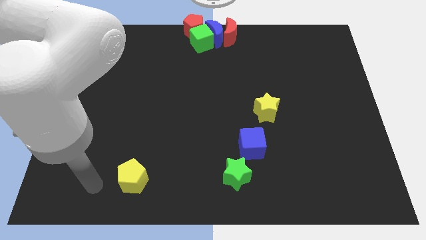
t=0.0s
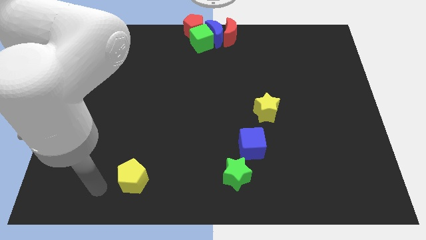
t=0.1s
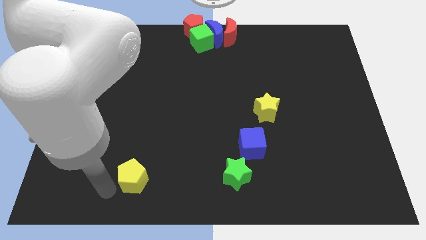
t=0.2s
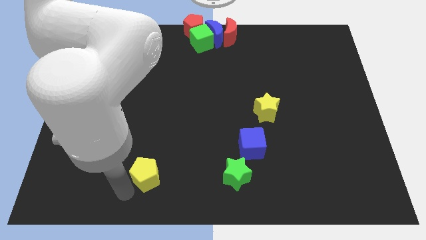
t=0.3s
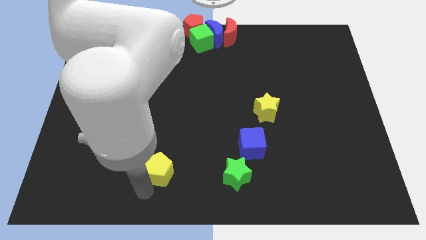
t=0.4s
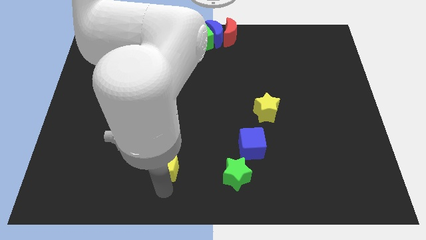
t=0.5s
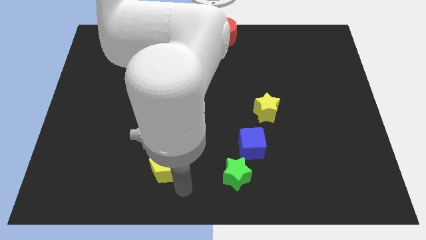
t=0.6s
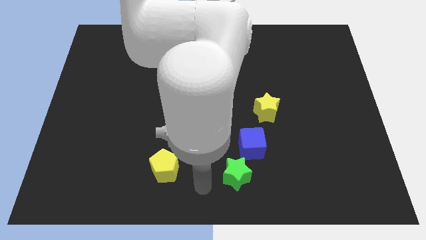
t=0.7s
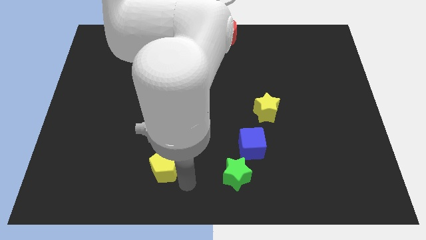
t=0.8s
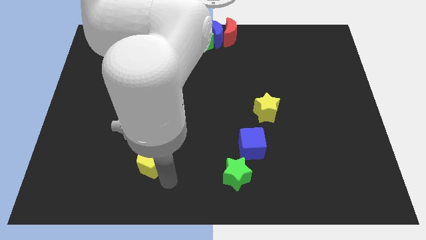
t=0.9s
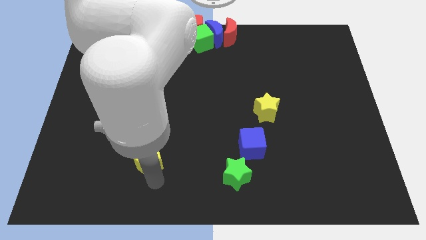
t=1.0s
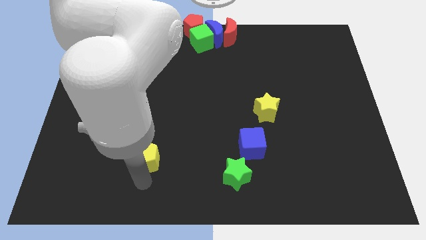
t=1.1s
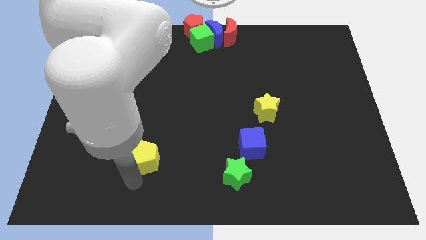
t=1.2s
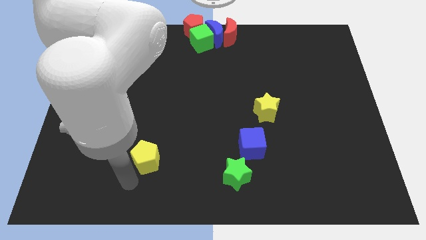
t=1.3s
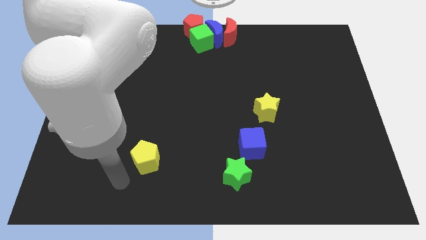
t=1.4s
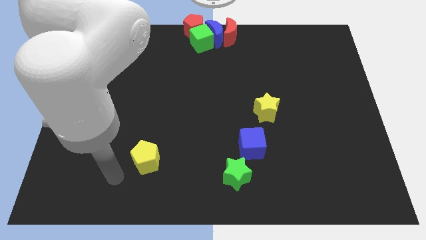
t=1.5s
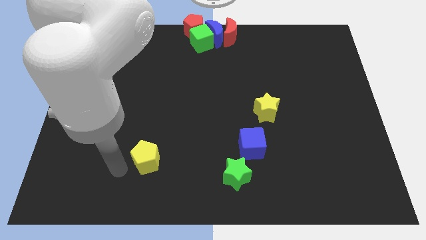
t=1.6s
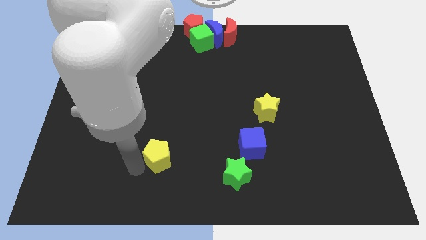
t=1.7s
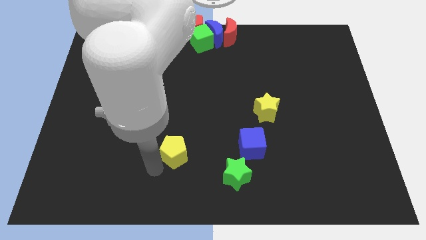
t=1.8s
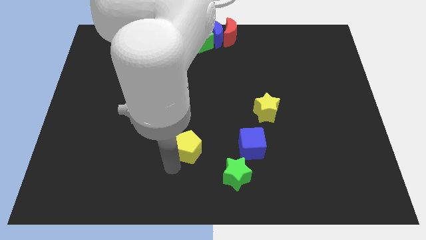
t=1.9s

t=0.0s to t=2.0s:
place the yellow pentagon to the left of the blue cube

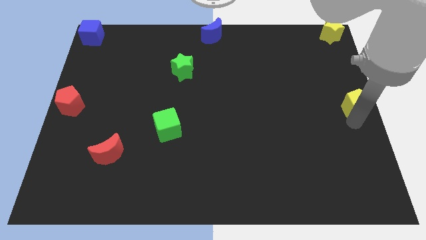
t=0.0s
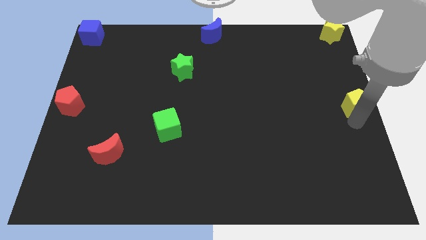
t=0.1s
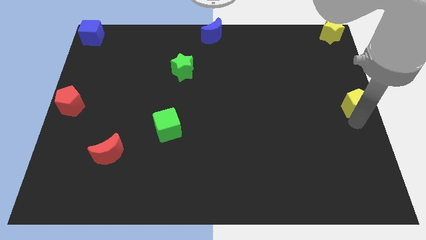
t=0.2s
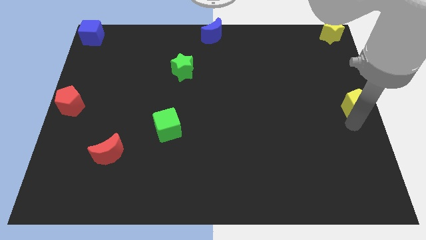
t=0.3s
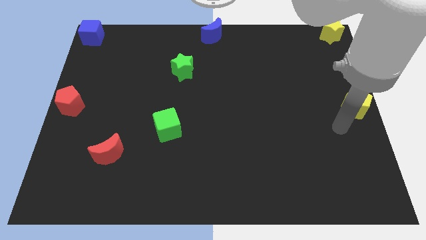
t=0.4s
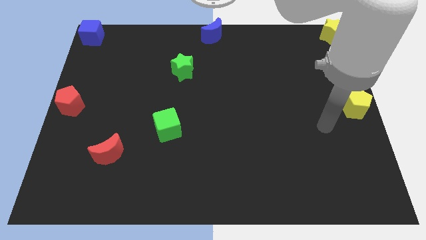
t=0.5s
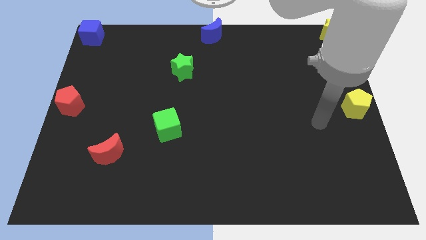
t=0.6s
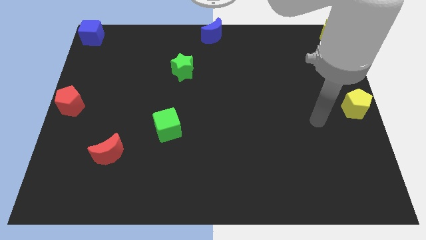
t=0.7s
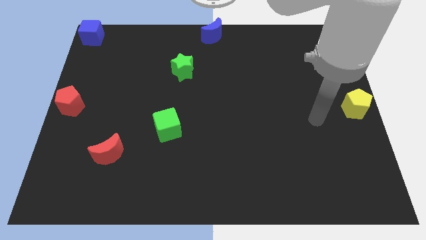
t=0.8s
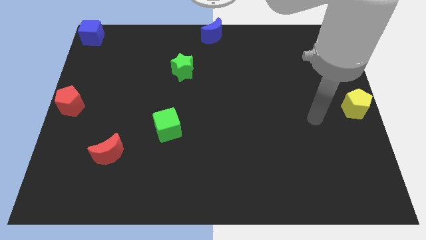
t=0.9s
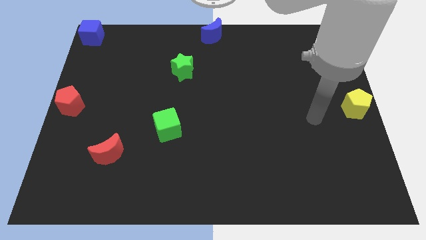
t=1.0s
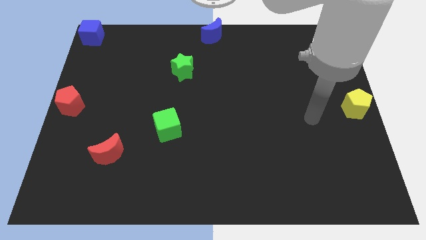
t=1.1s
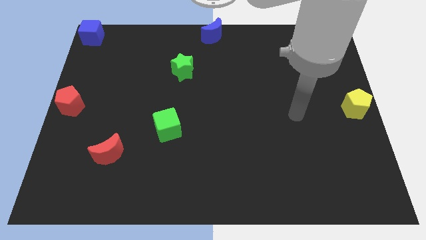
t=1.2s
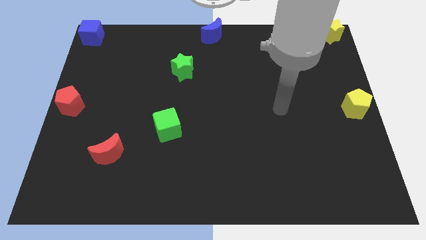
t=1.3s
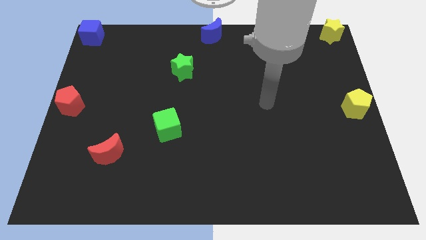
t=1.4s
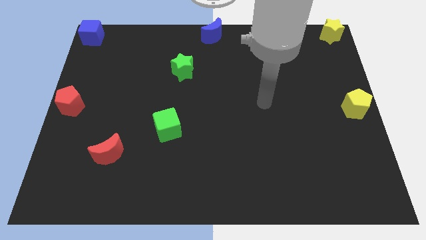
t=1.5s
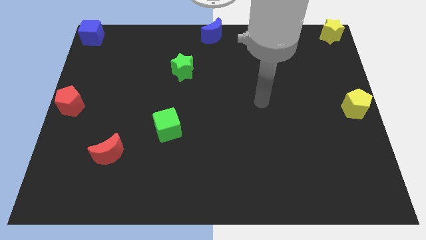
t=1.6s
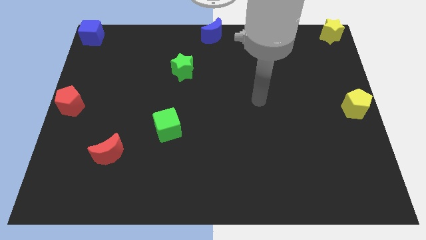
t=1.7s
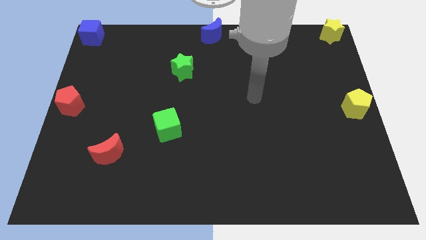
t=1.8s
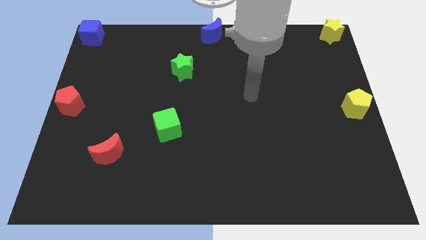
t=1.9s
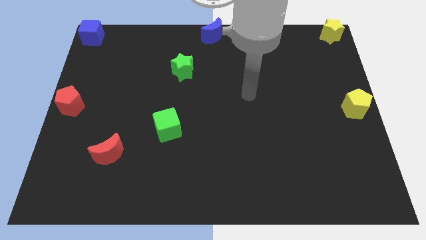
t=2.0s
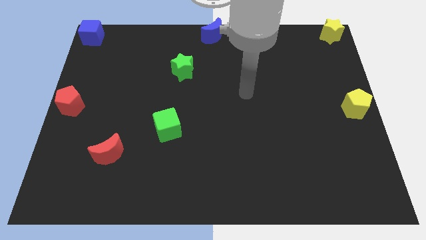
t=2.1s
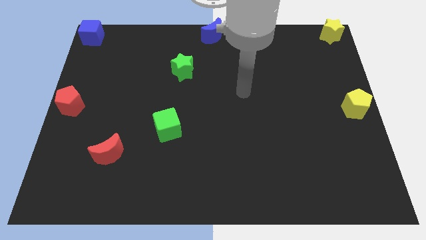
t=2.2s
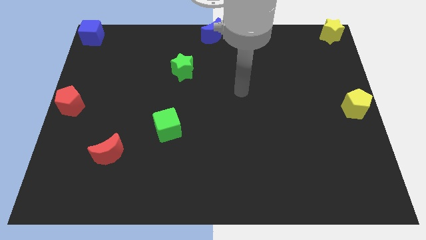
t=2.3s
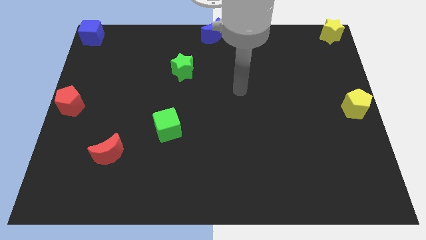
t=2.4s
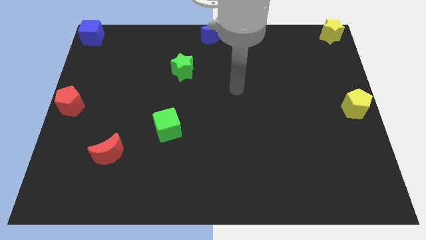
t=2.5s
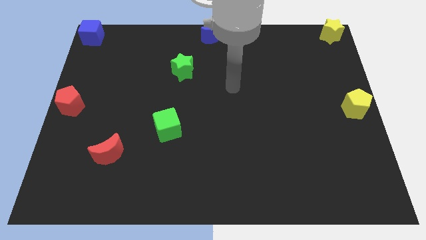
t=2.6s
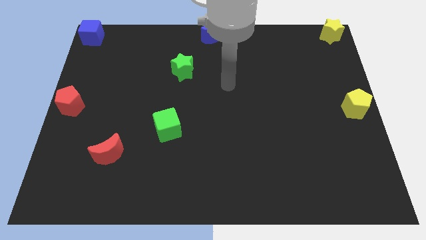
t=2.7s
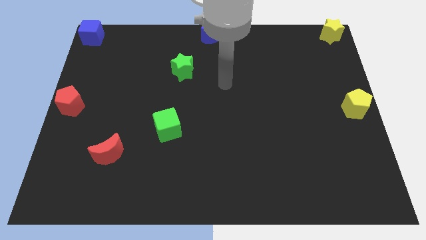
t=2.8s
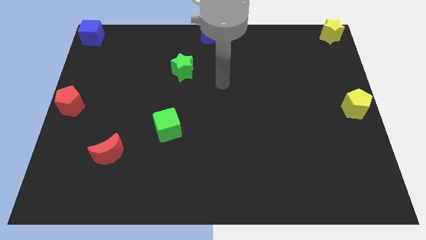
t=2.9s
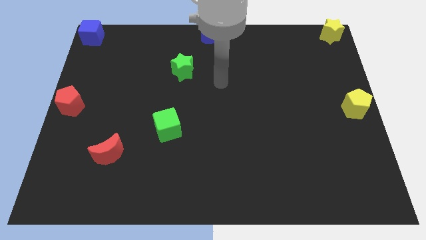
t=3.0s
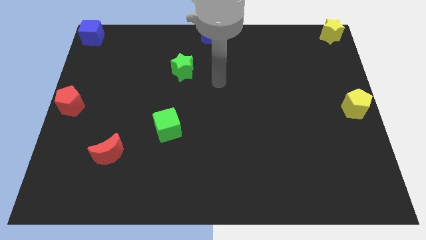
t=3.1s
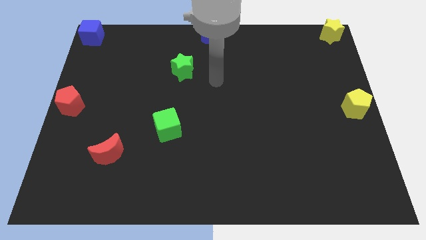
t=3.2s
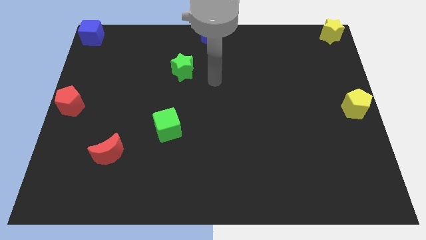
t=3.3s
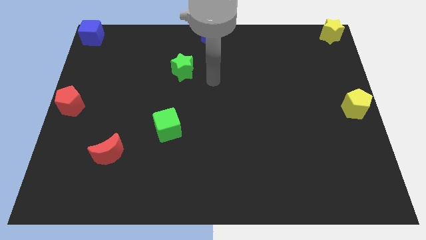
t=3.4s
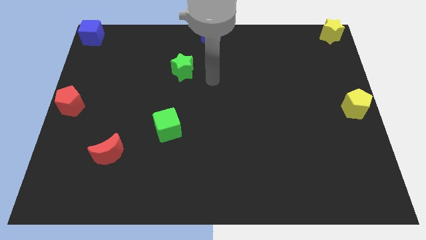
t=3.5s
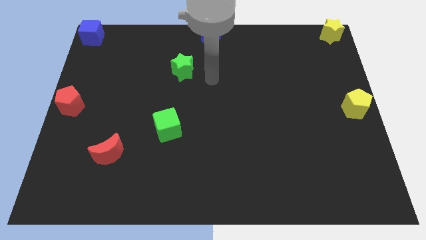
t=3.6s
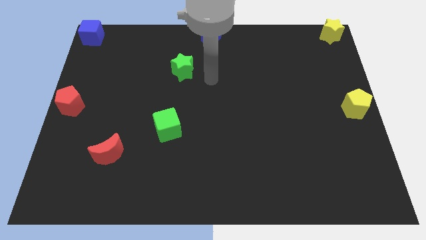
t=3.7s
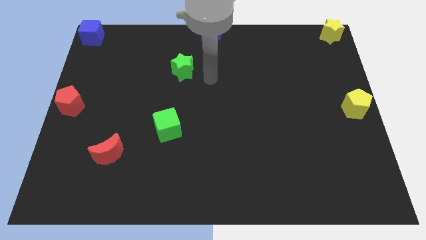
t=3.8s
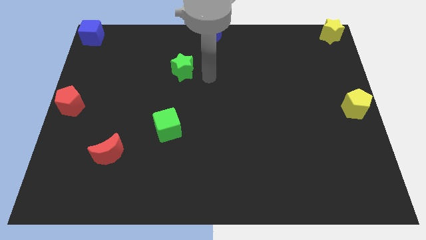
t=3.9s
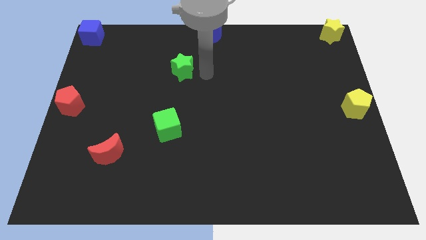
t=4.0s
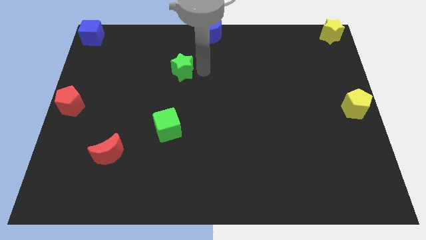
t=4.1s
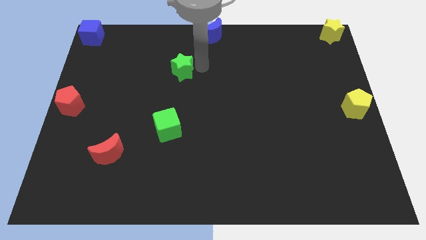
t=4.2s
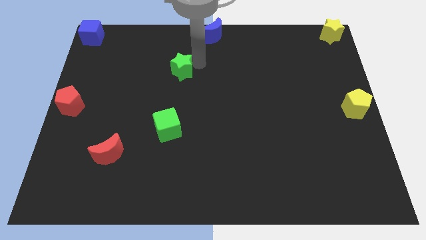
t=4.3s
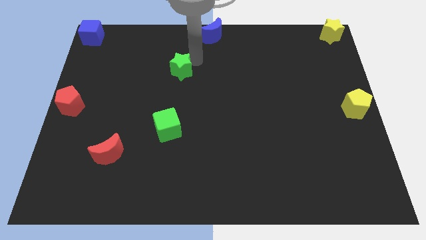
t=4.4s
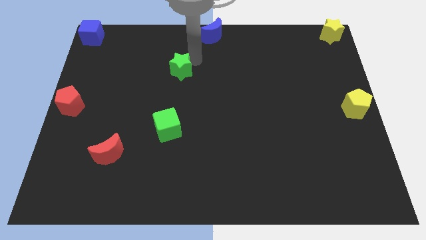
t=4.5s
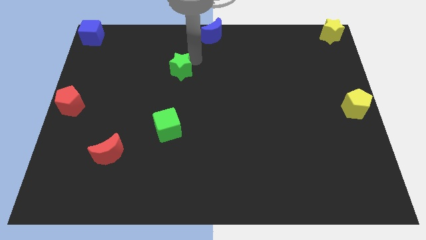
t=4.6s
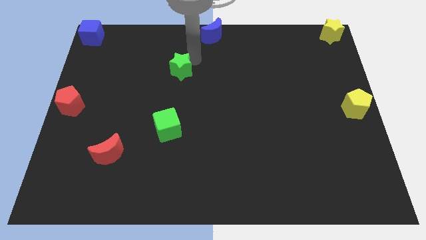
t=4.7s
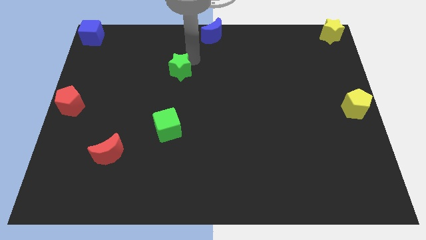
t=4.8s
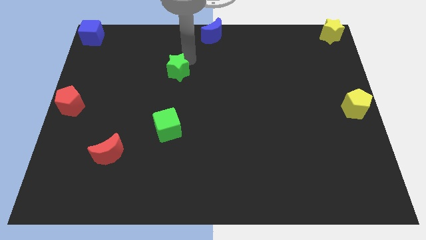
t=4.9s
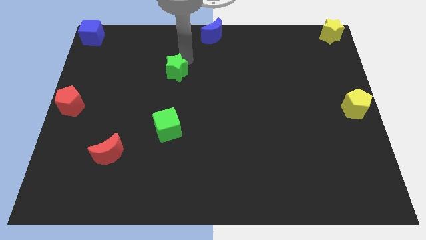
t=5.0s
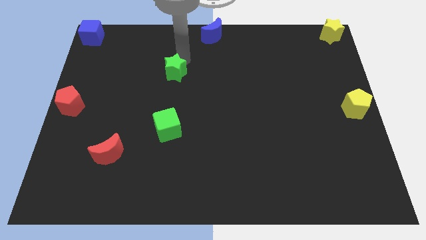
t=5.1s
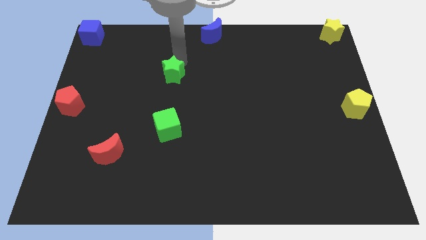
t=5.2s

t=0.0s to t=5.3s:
move the arm towards the top of the green star

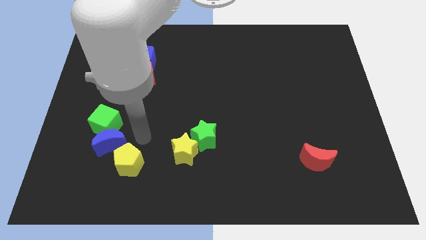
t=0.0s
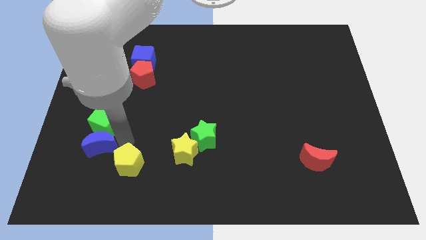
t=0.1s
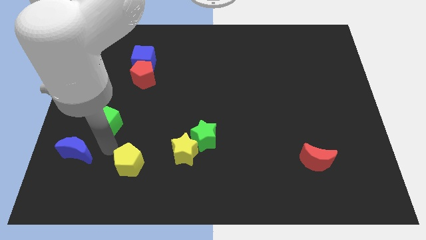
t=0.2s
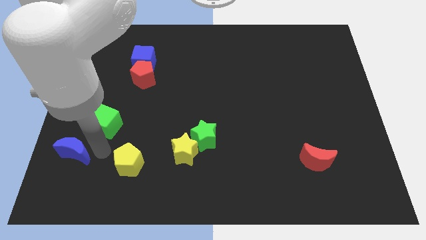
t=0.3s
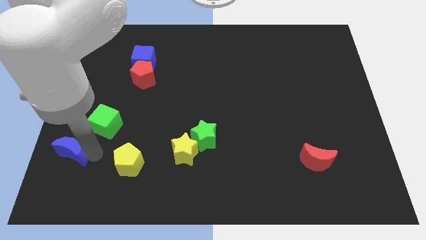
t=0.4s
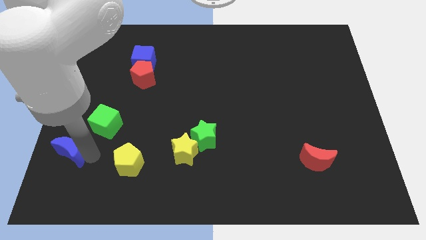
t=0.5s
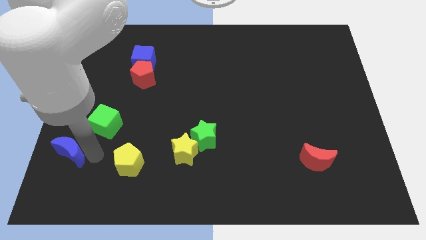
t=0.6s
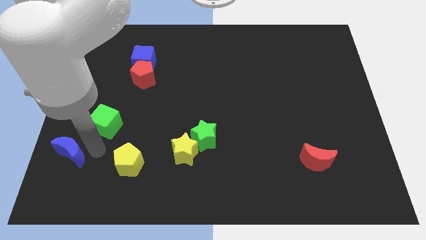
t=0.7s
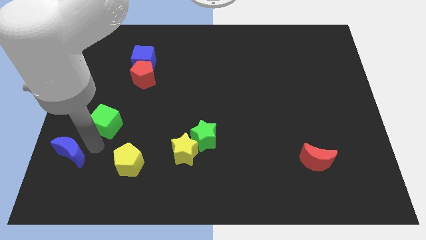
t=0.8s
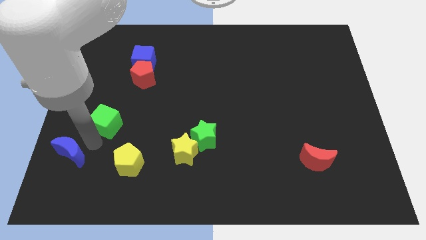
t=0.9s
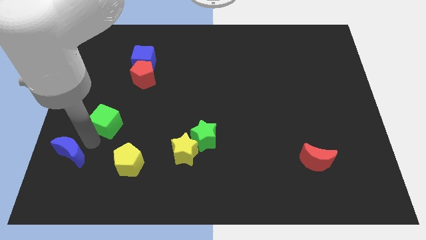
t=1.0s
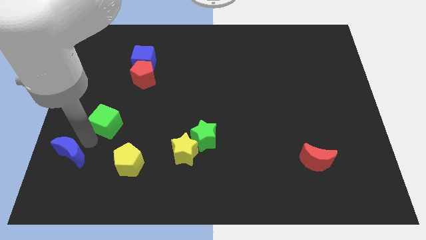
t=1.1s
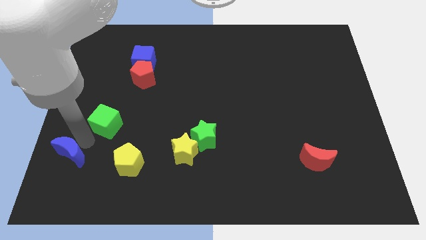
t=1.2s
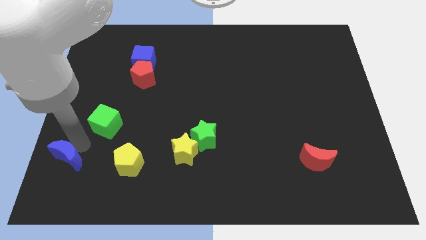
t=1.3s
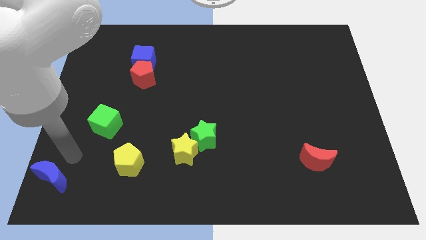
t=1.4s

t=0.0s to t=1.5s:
separate blue moon from green cube and yellow pentagon

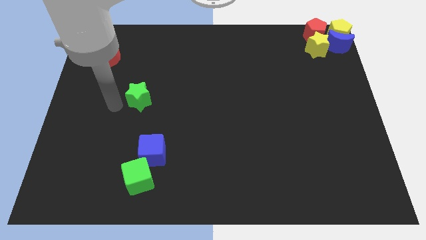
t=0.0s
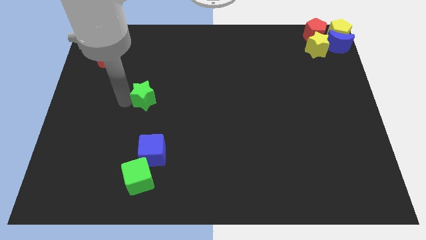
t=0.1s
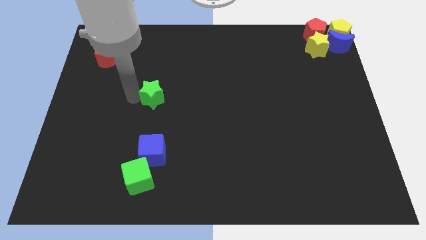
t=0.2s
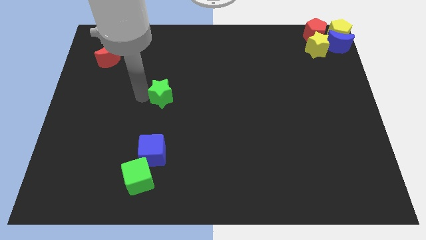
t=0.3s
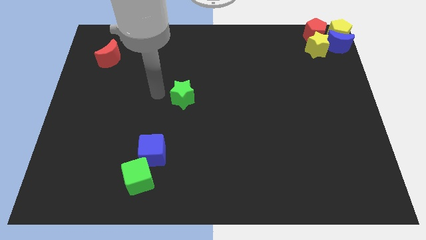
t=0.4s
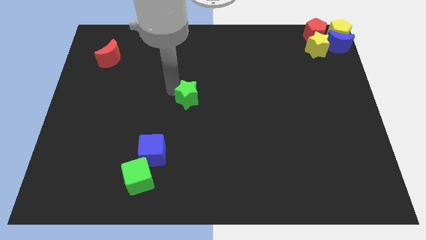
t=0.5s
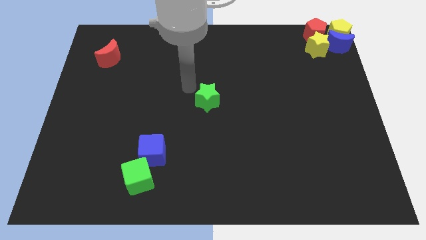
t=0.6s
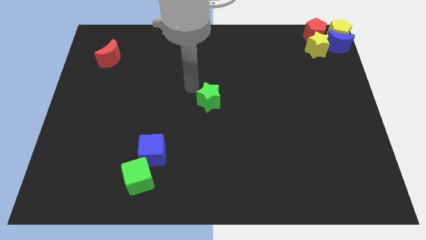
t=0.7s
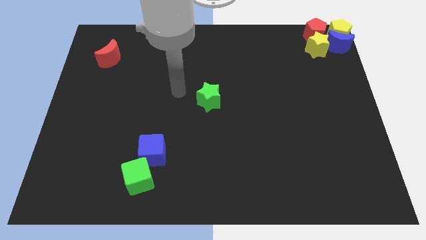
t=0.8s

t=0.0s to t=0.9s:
push the green star to the center of the board
